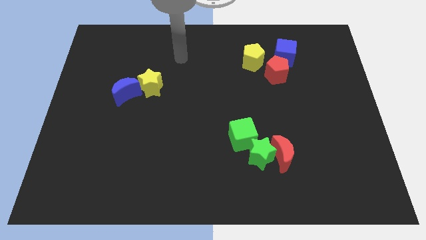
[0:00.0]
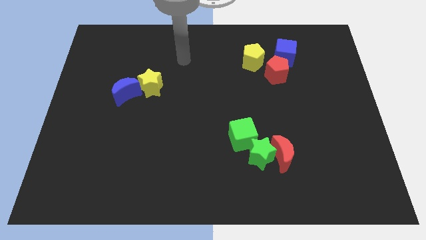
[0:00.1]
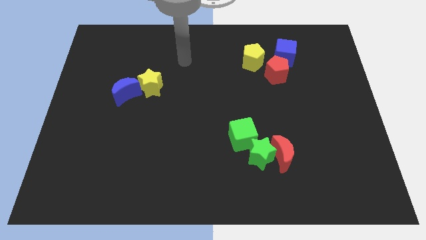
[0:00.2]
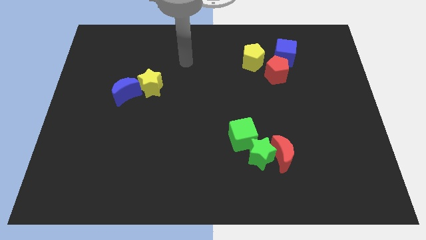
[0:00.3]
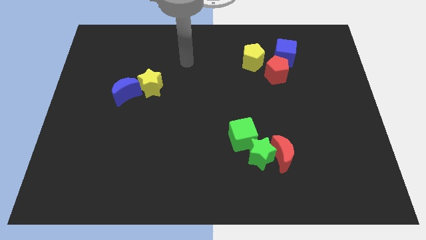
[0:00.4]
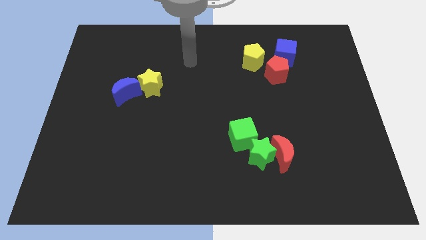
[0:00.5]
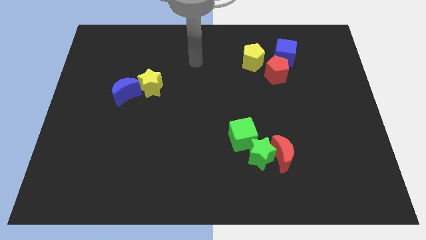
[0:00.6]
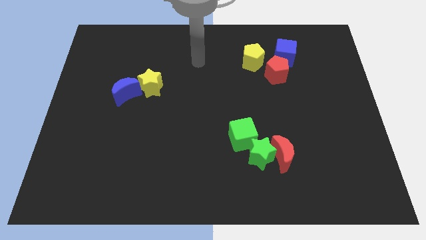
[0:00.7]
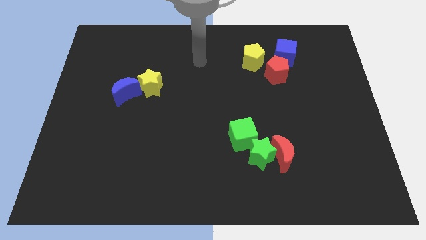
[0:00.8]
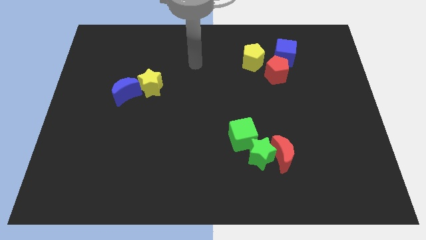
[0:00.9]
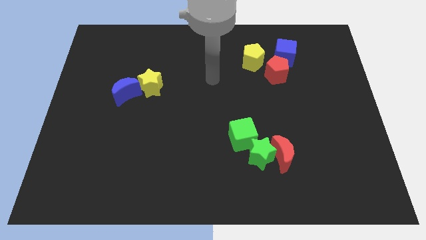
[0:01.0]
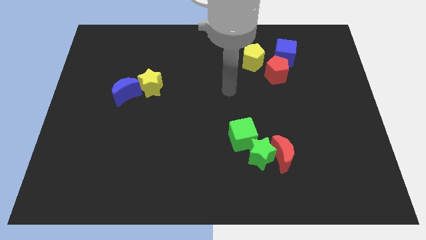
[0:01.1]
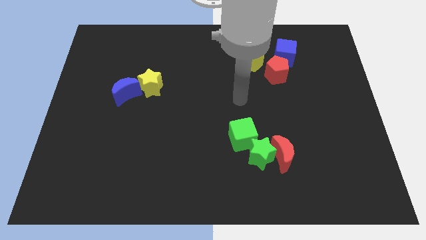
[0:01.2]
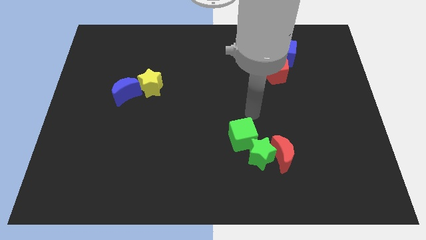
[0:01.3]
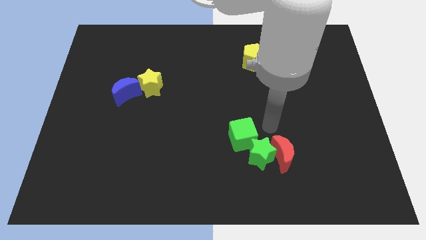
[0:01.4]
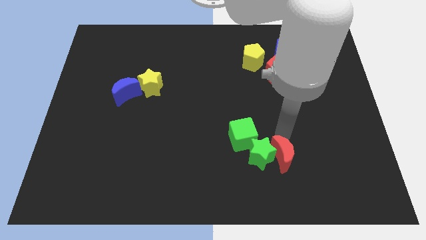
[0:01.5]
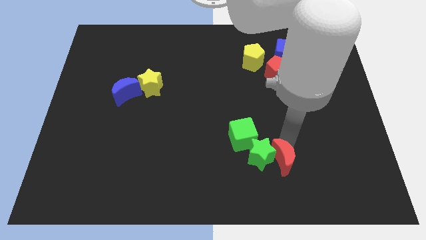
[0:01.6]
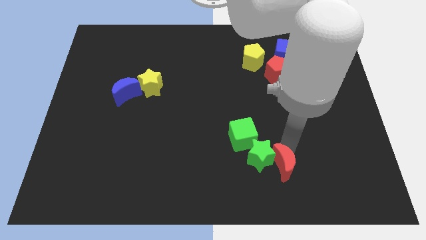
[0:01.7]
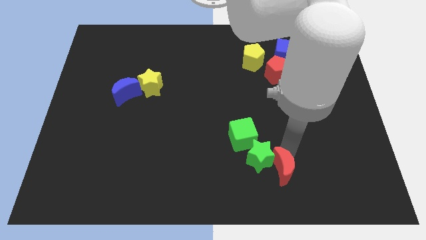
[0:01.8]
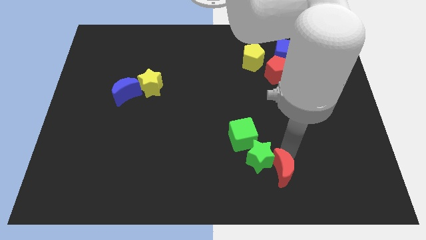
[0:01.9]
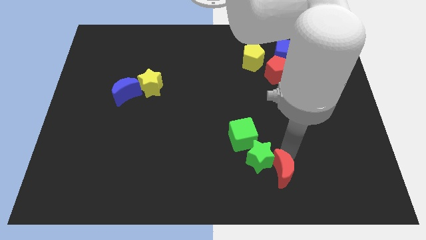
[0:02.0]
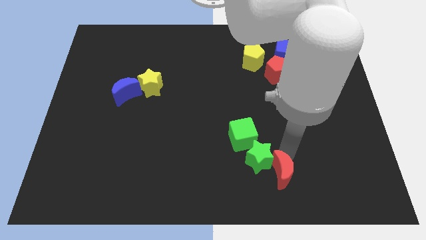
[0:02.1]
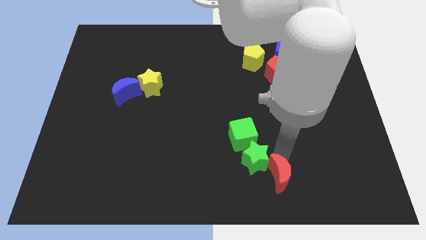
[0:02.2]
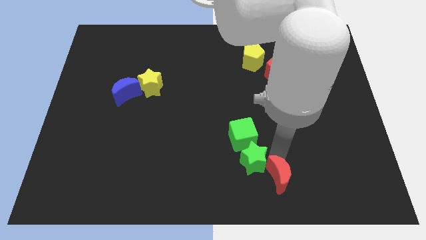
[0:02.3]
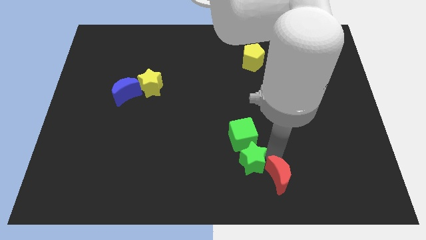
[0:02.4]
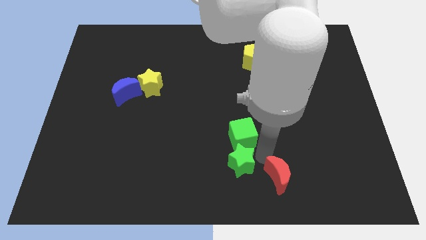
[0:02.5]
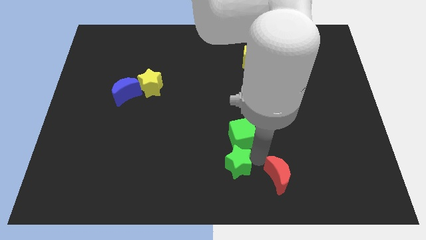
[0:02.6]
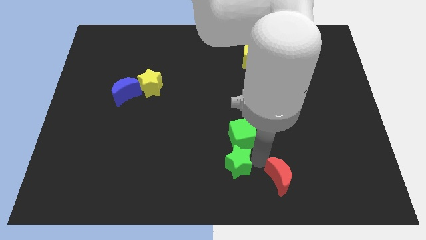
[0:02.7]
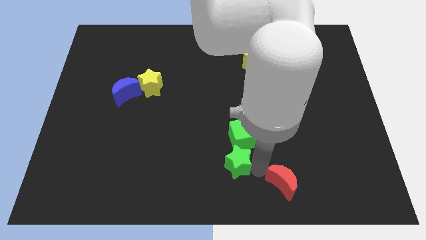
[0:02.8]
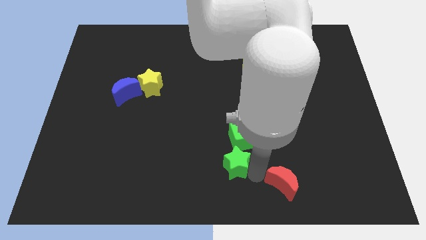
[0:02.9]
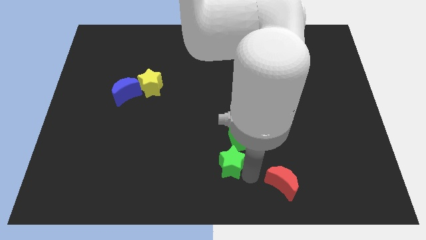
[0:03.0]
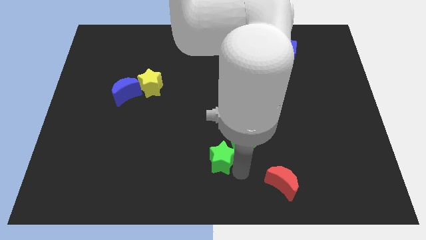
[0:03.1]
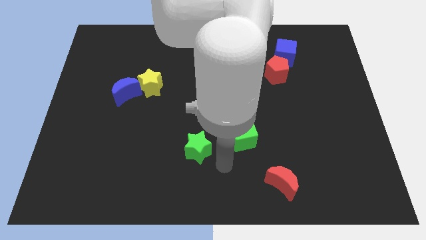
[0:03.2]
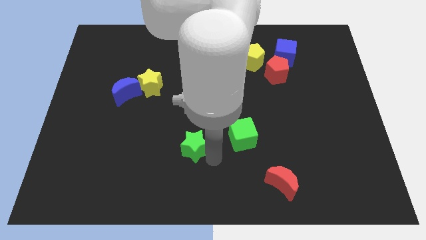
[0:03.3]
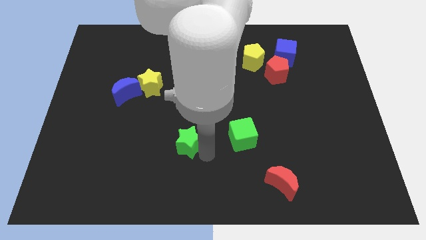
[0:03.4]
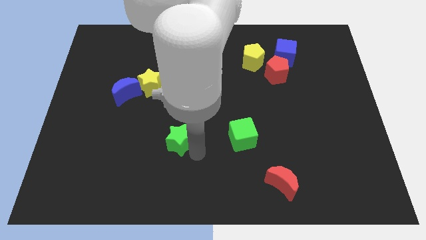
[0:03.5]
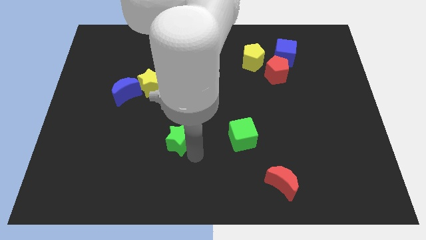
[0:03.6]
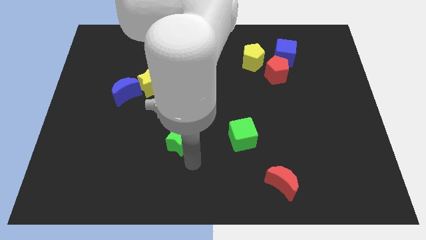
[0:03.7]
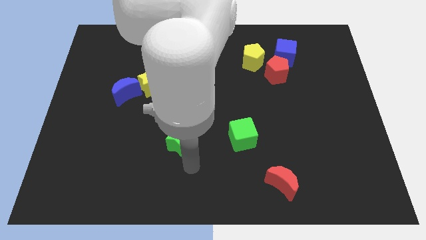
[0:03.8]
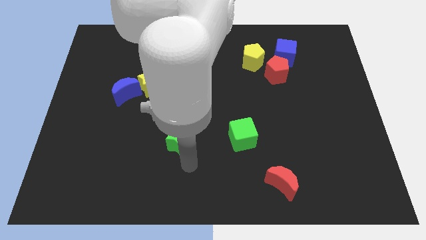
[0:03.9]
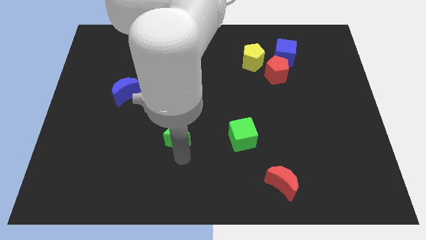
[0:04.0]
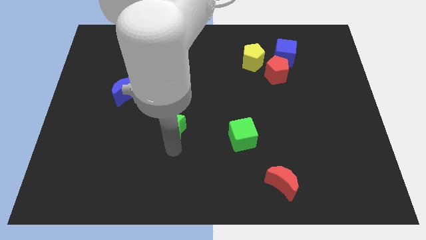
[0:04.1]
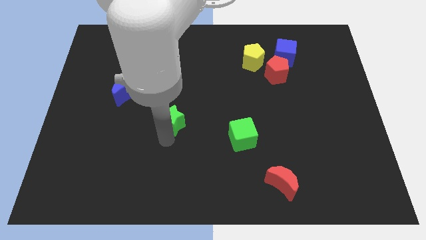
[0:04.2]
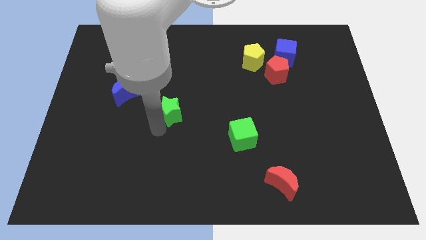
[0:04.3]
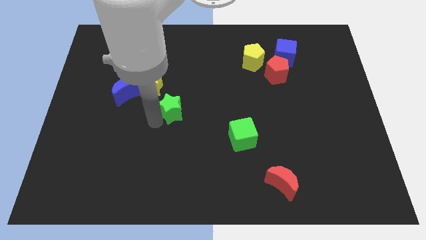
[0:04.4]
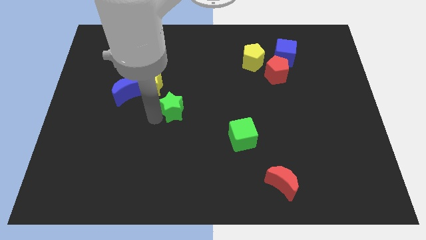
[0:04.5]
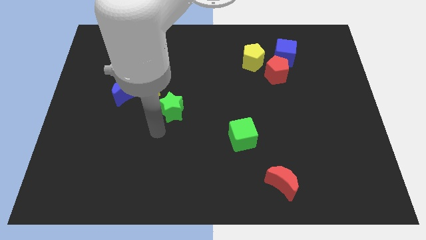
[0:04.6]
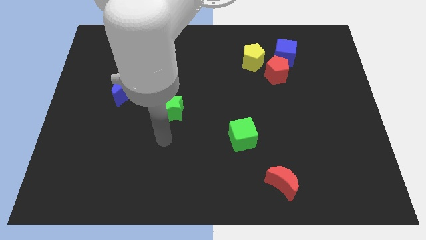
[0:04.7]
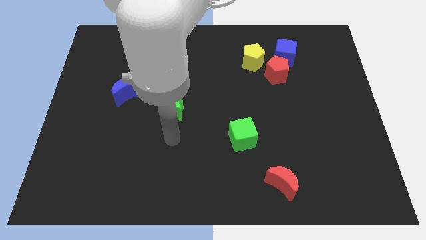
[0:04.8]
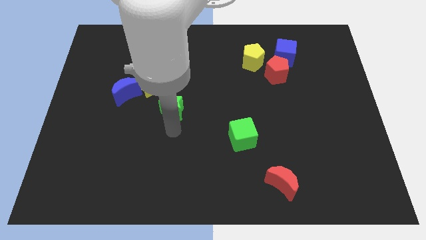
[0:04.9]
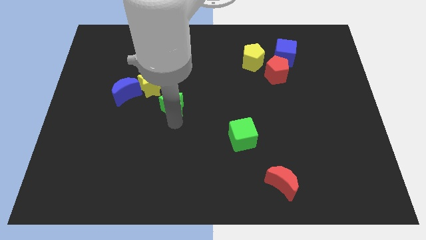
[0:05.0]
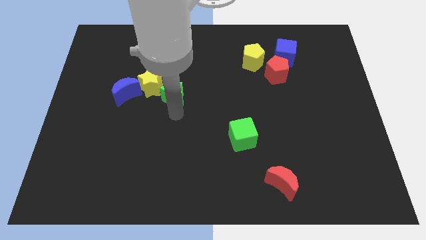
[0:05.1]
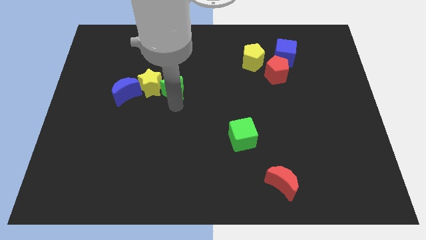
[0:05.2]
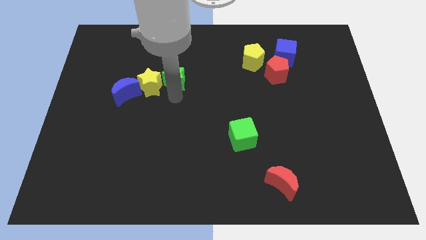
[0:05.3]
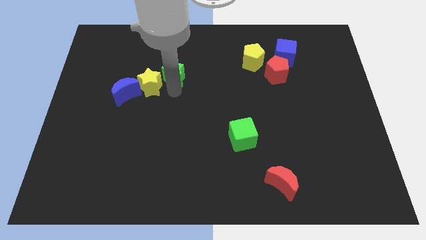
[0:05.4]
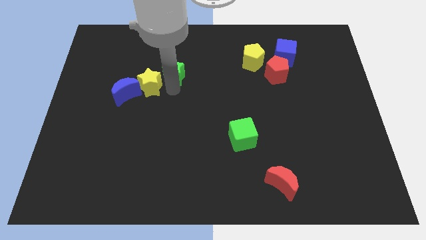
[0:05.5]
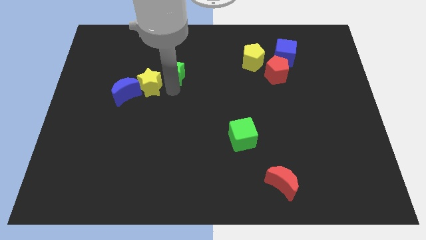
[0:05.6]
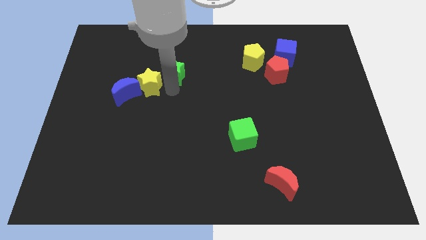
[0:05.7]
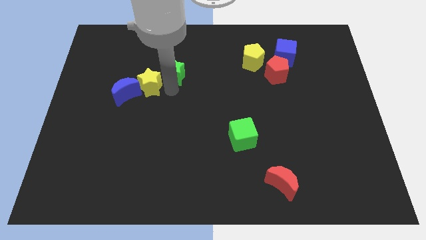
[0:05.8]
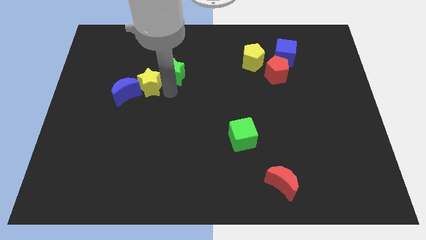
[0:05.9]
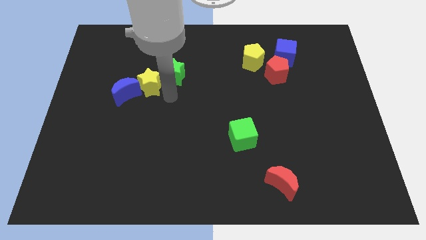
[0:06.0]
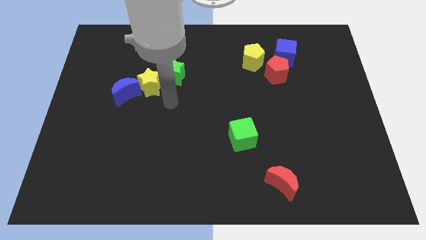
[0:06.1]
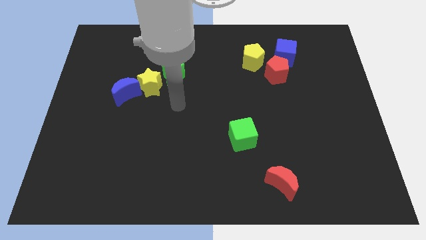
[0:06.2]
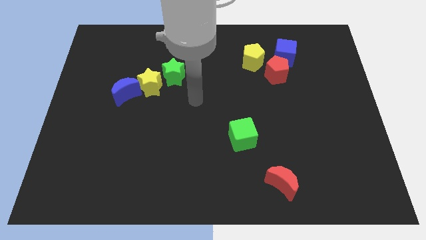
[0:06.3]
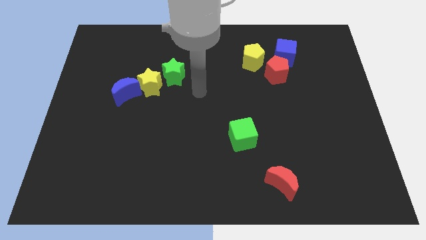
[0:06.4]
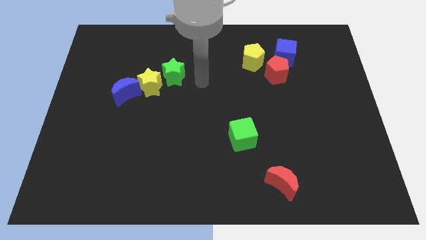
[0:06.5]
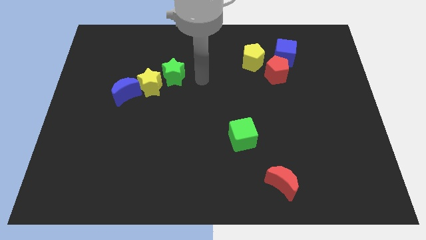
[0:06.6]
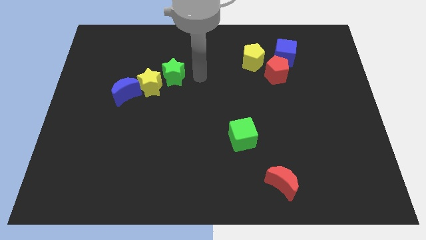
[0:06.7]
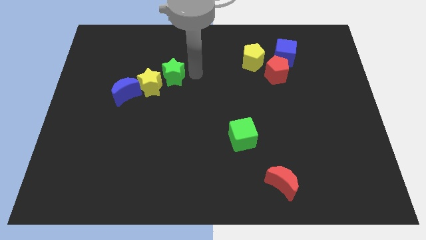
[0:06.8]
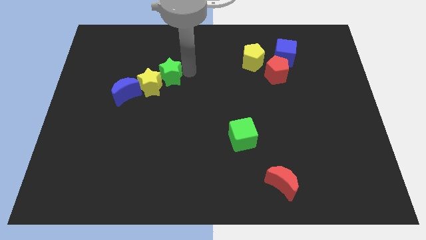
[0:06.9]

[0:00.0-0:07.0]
put the green star to the yellow star

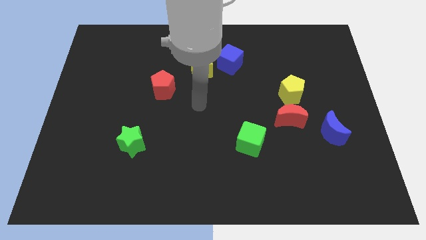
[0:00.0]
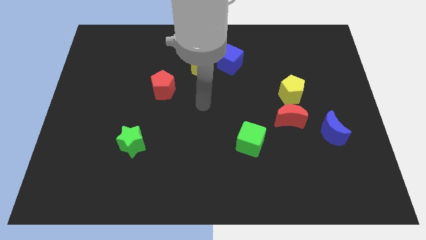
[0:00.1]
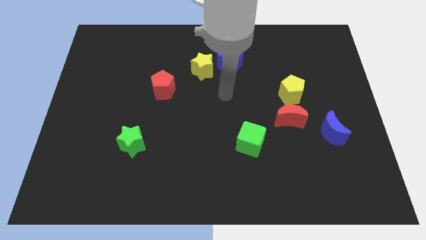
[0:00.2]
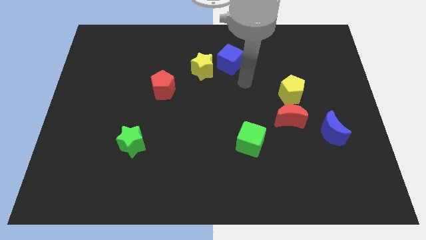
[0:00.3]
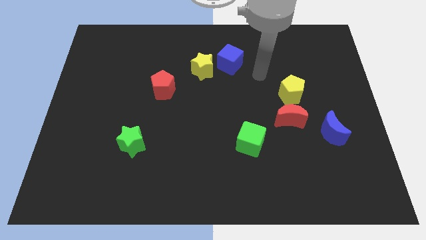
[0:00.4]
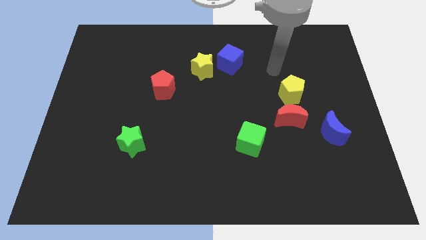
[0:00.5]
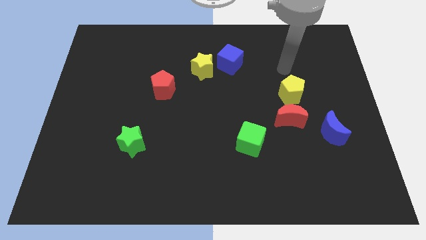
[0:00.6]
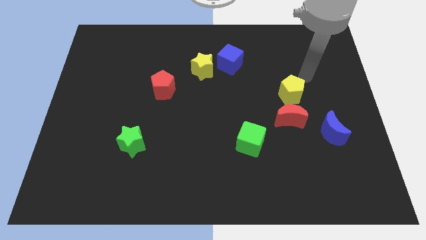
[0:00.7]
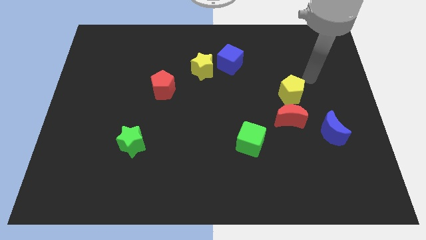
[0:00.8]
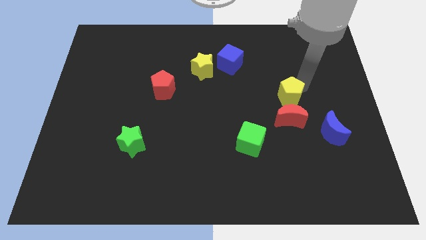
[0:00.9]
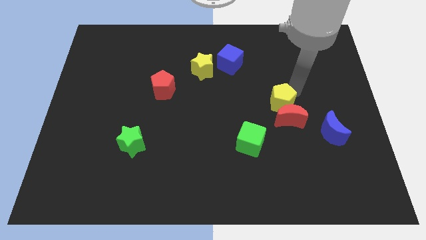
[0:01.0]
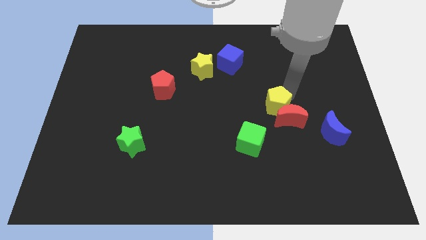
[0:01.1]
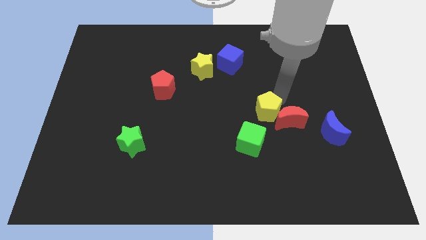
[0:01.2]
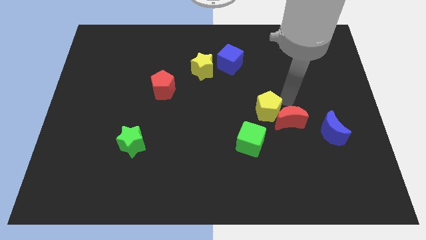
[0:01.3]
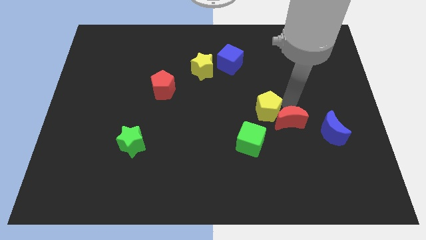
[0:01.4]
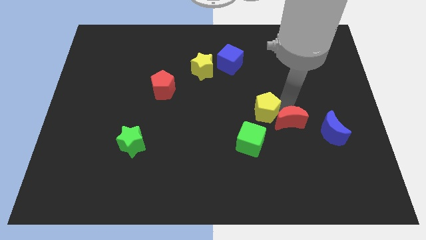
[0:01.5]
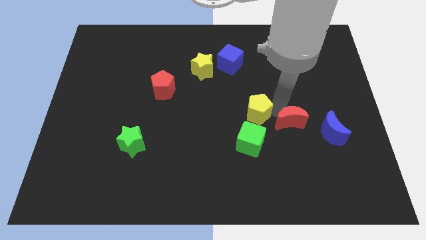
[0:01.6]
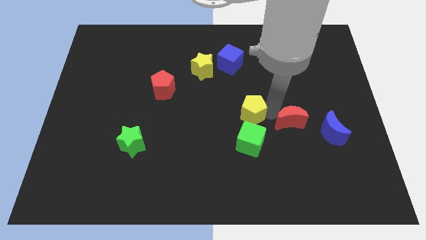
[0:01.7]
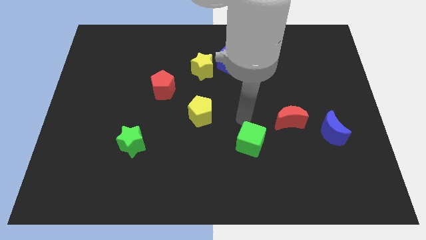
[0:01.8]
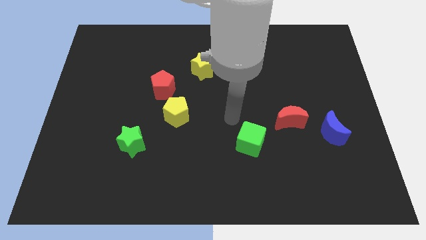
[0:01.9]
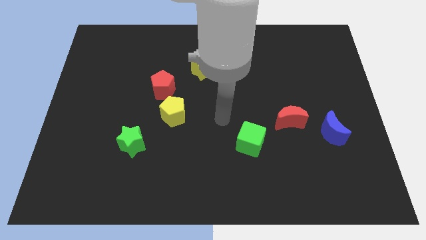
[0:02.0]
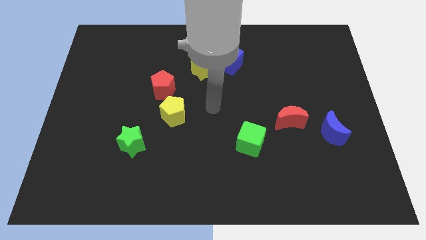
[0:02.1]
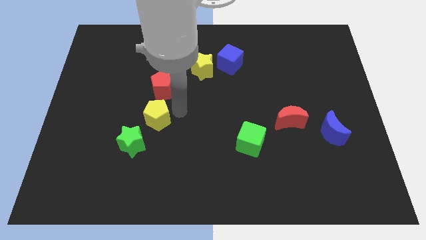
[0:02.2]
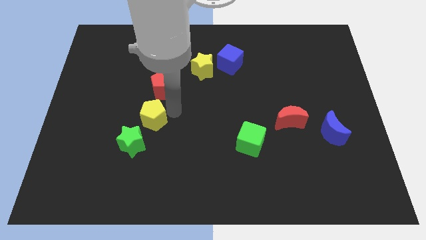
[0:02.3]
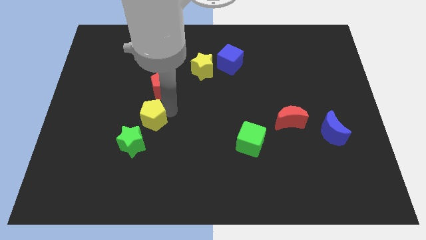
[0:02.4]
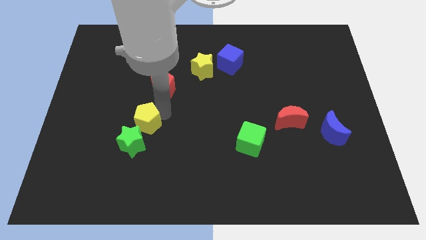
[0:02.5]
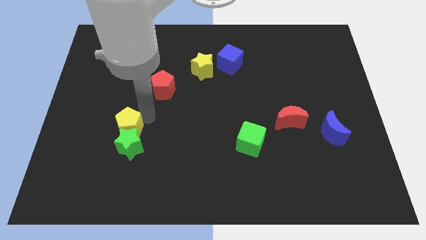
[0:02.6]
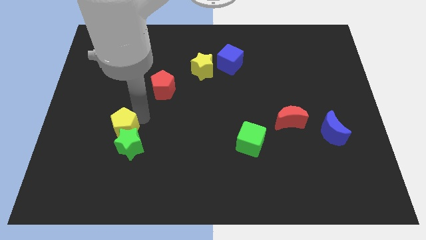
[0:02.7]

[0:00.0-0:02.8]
put the yellow pentagon towards the green star
